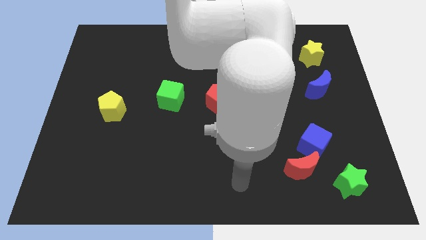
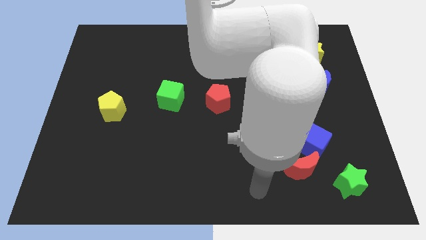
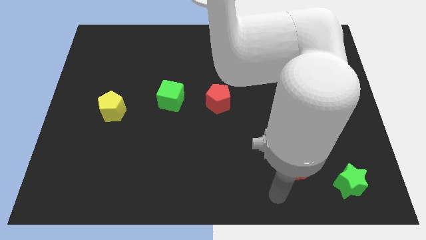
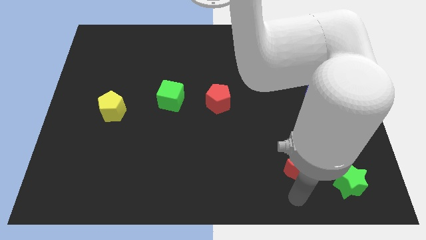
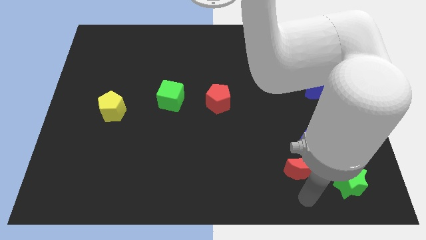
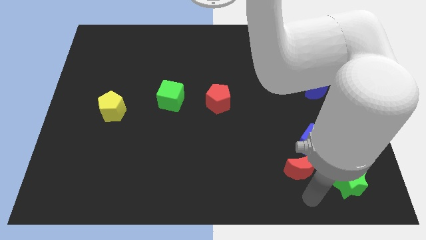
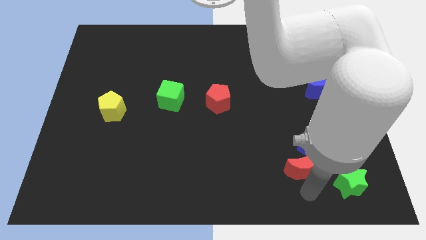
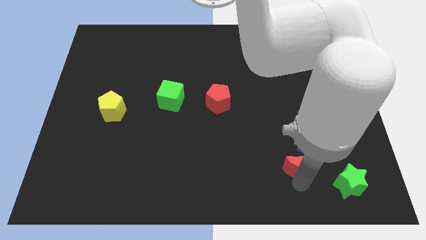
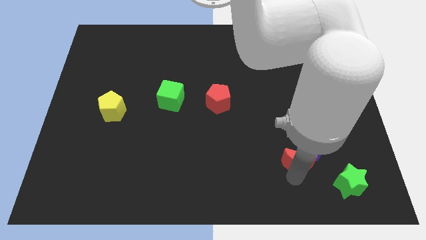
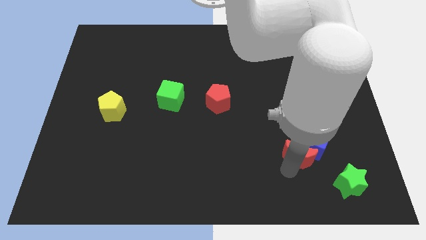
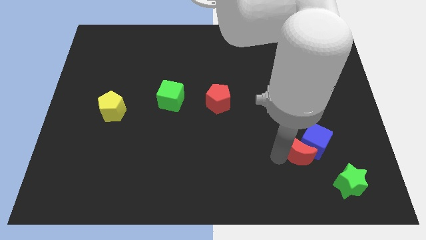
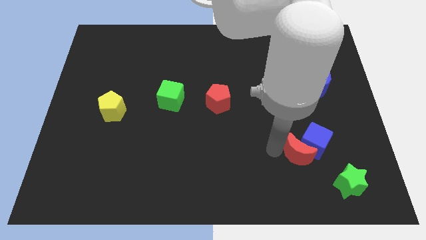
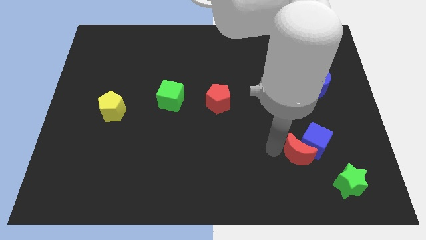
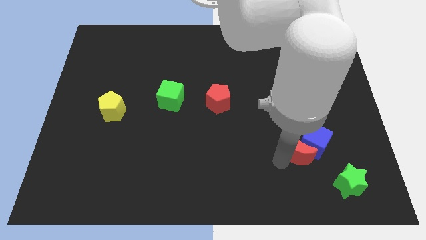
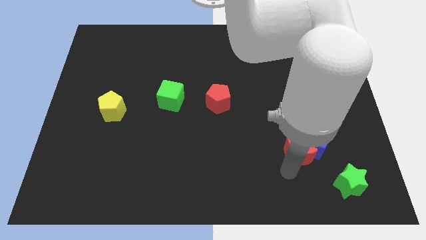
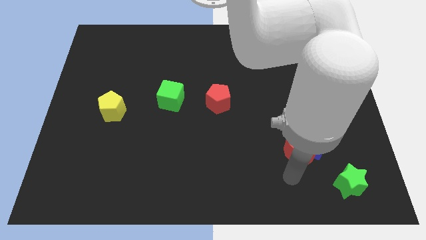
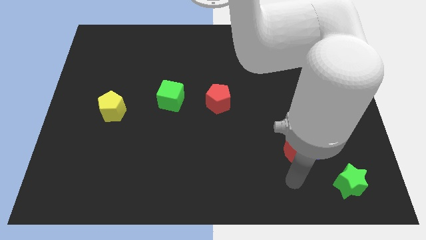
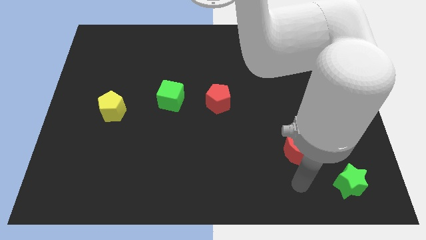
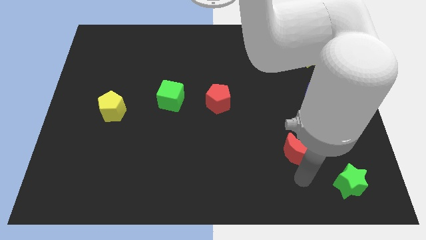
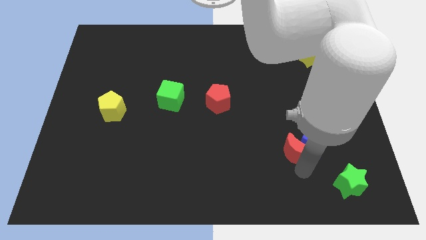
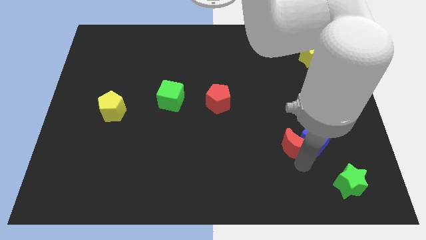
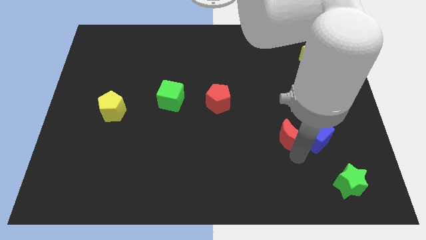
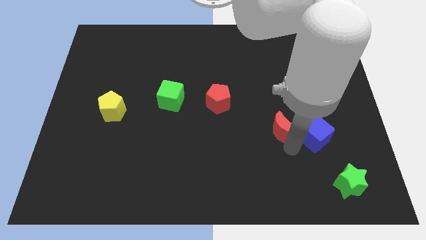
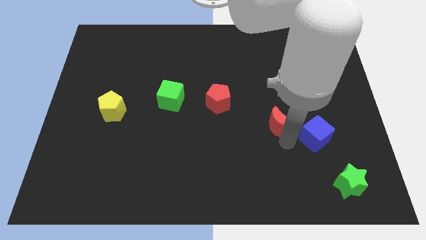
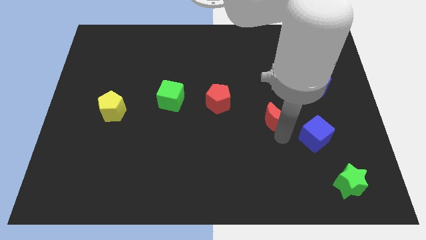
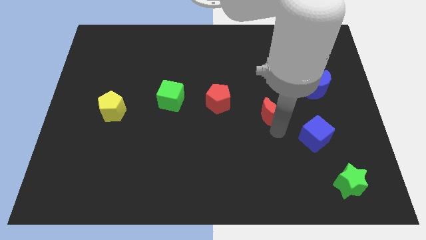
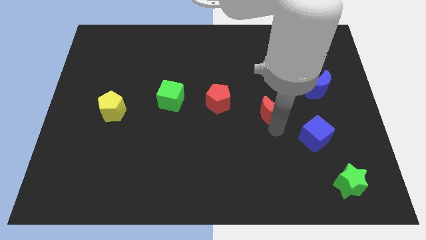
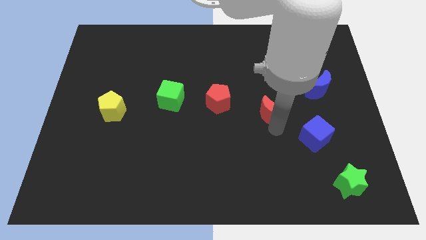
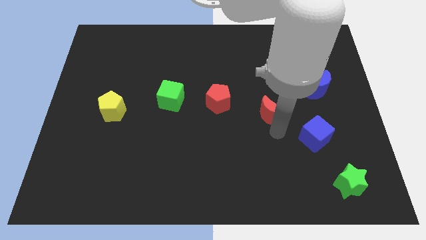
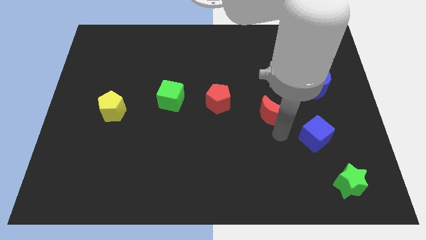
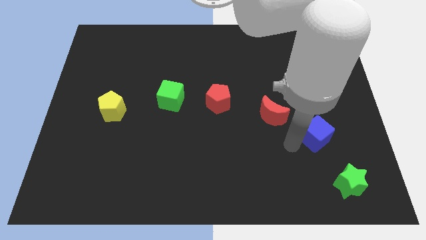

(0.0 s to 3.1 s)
slide red moon to the bottom right of red pentagon

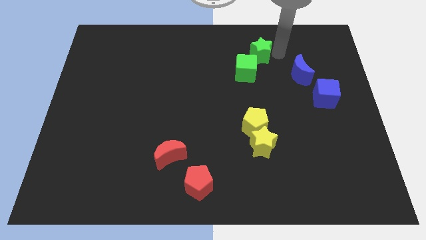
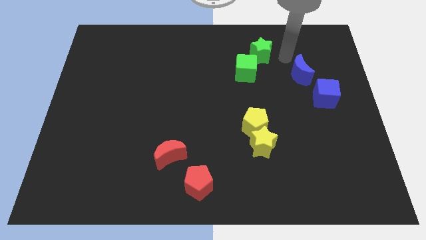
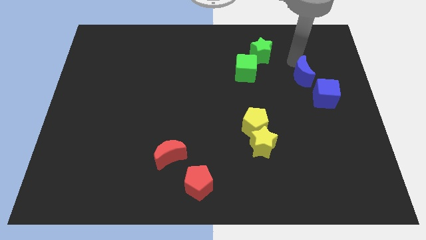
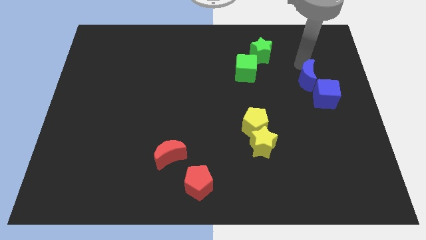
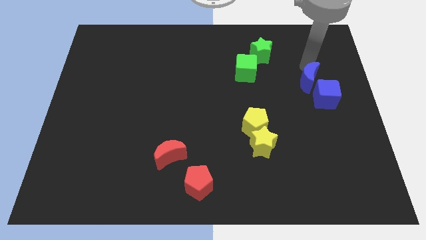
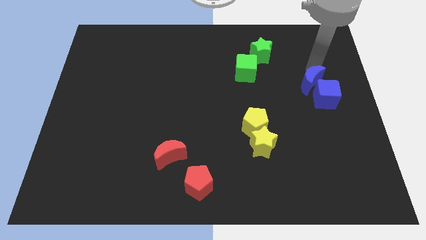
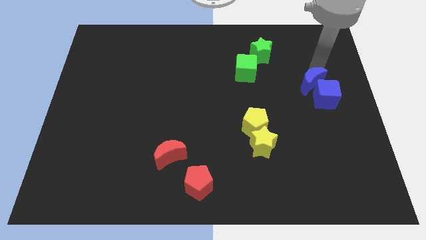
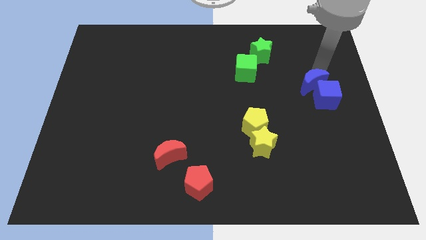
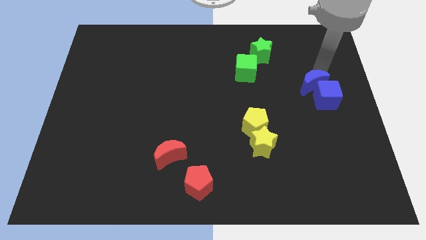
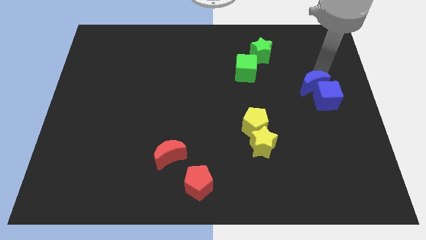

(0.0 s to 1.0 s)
push blue crescent in to blue cube

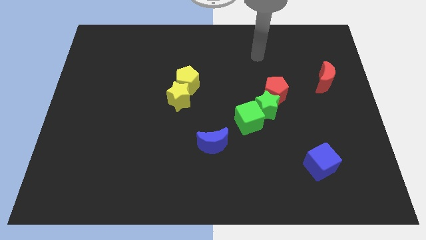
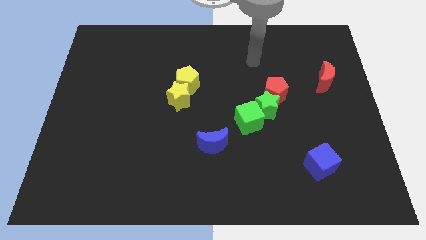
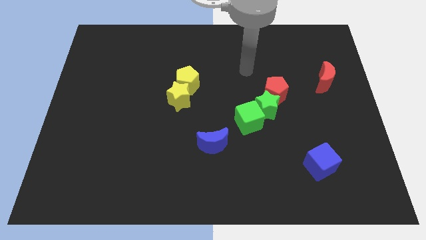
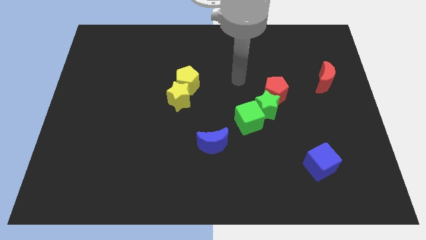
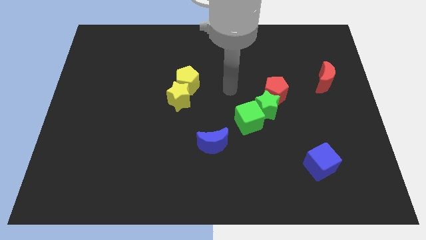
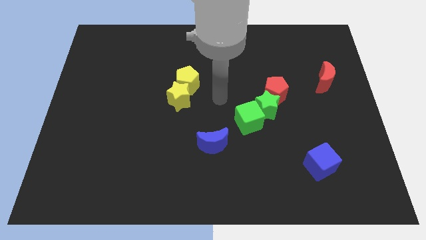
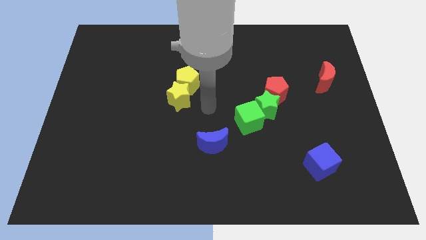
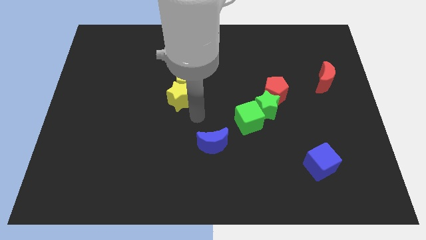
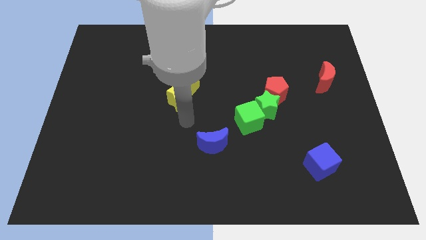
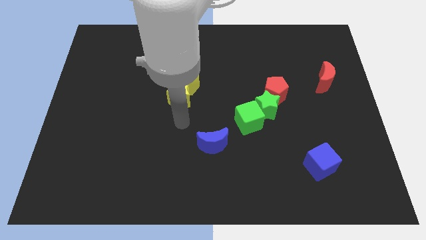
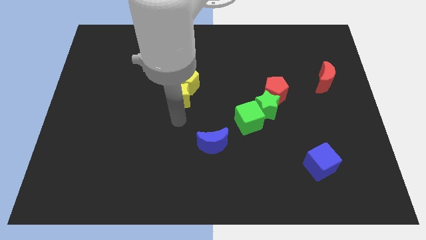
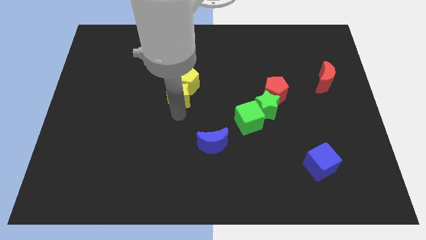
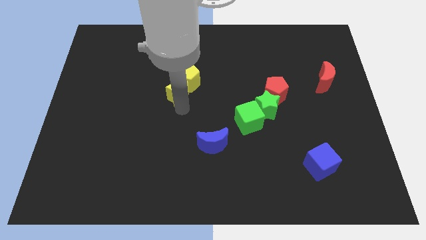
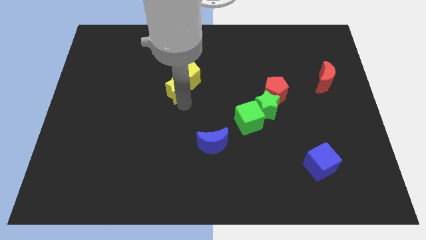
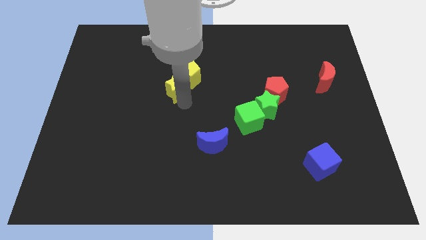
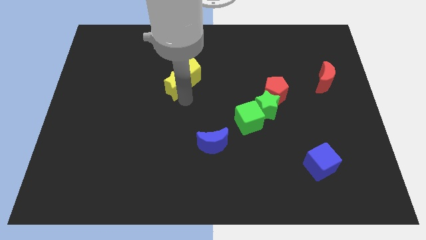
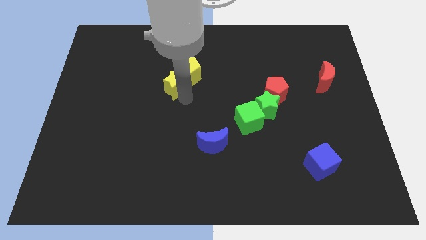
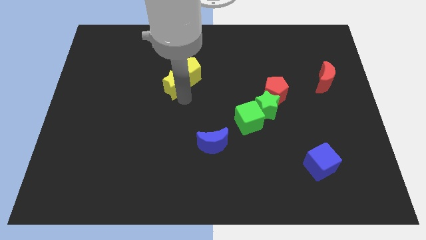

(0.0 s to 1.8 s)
move the yellow star slightly up

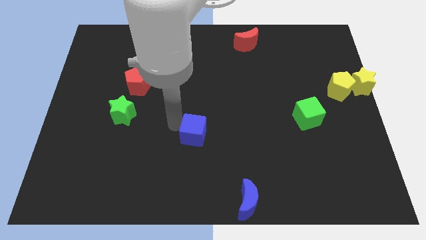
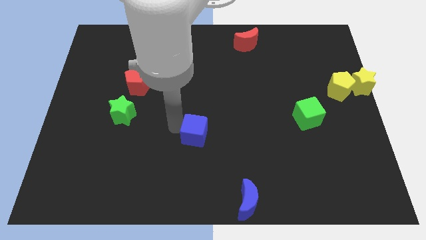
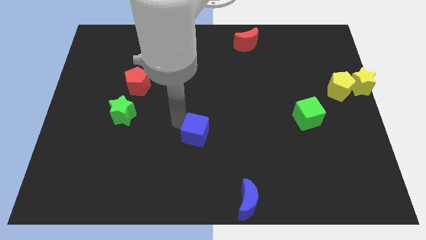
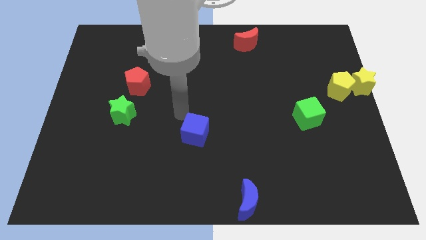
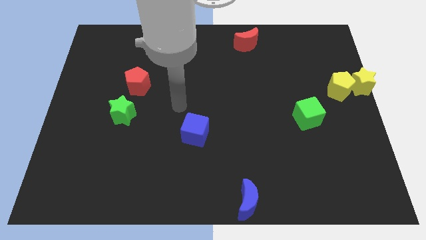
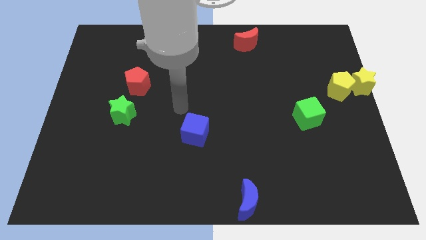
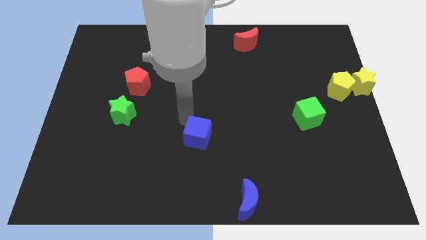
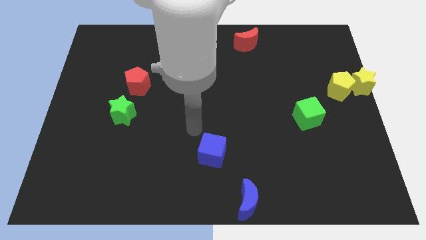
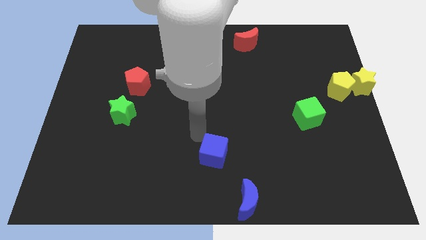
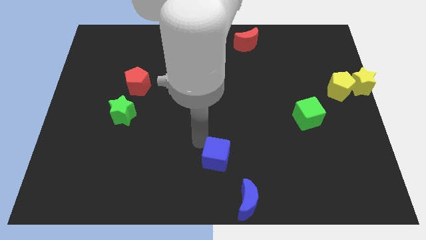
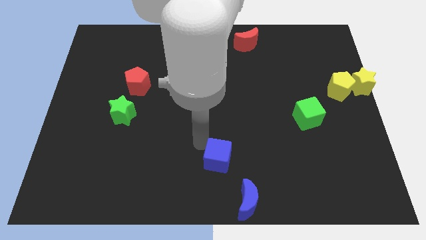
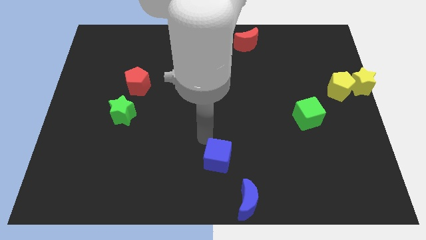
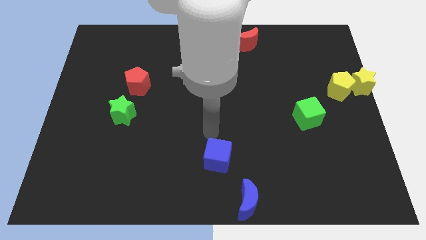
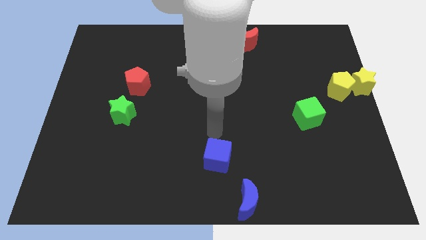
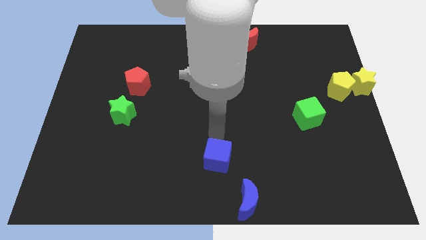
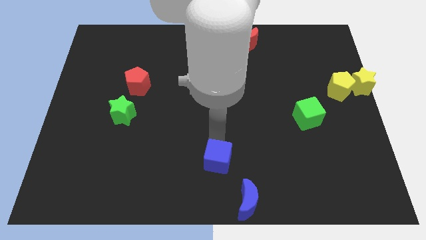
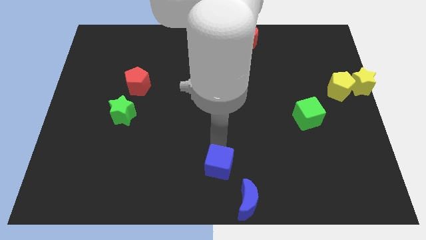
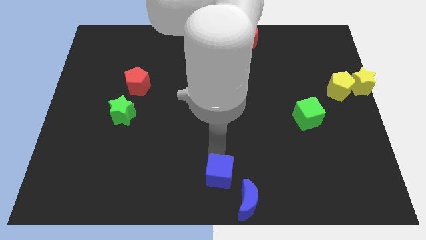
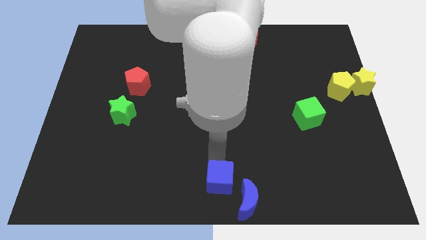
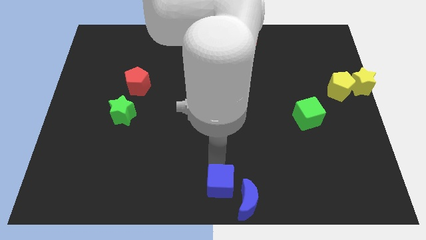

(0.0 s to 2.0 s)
move the blue cube towards the bottom center

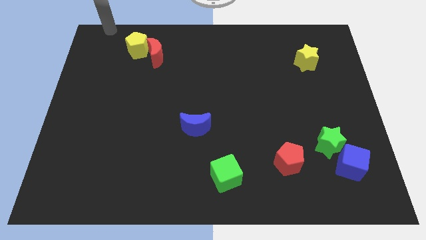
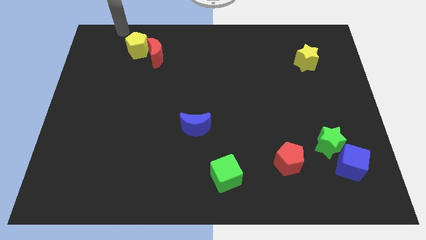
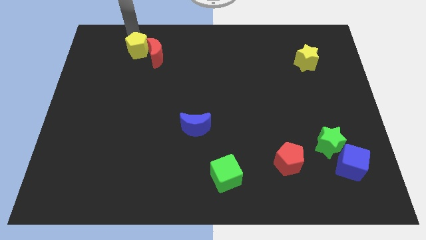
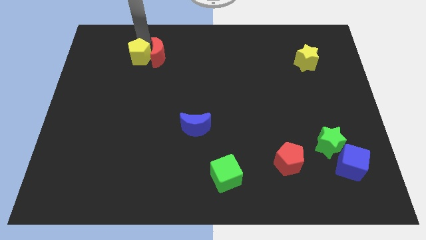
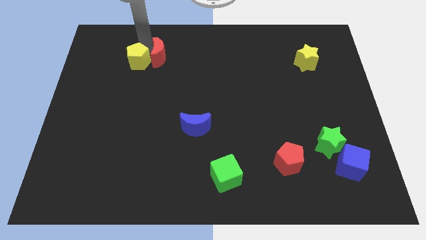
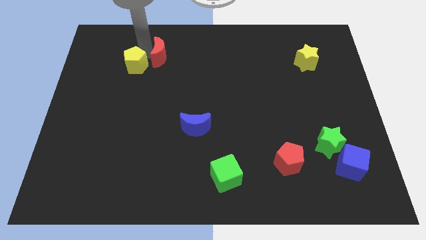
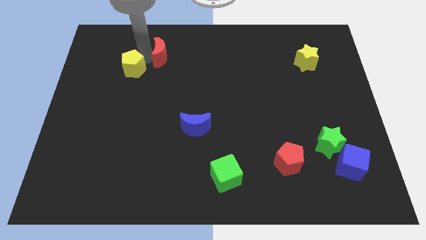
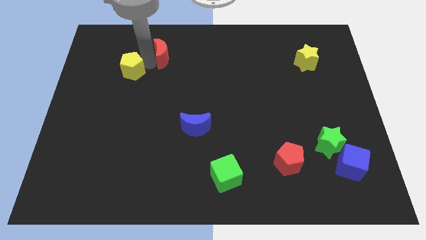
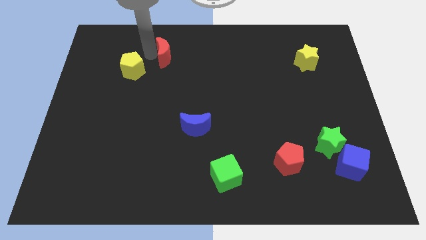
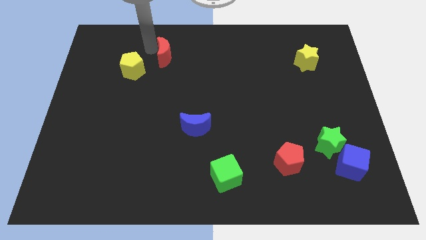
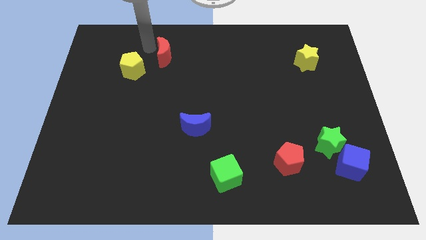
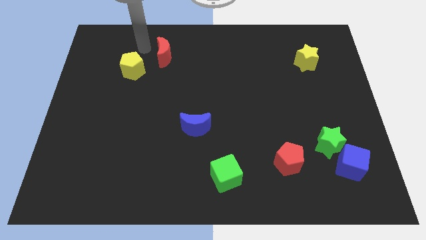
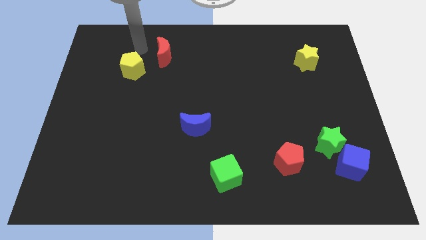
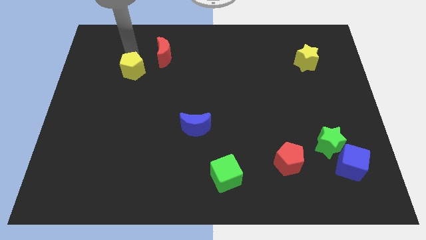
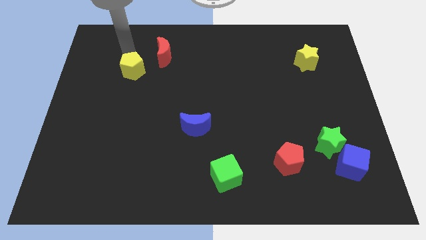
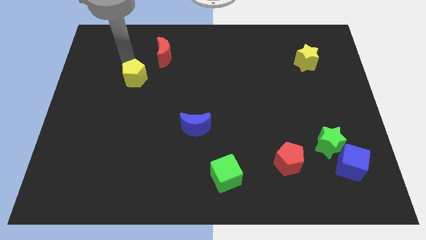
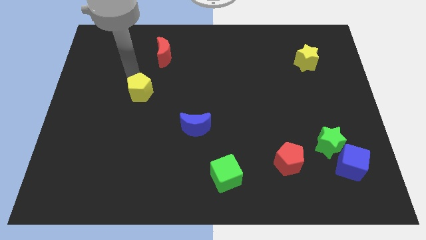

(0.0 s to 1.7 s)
separate the yellow pentagon and red moon
